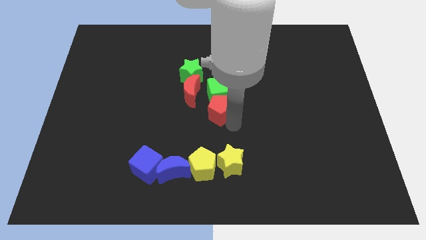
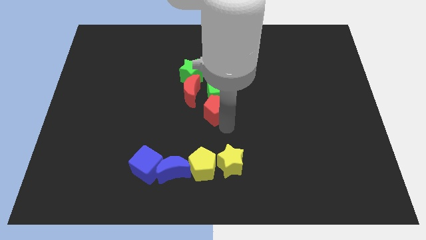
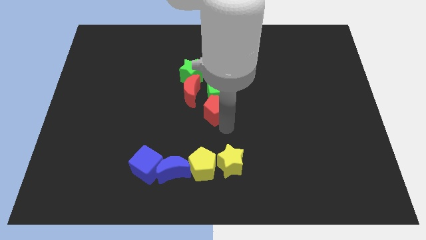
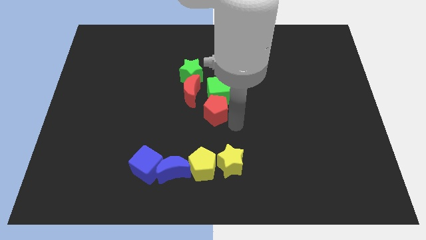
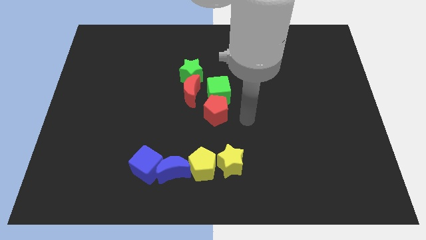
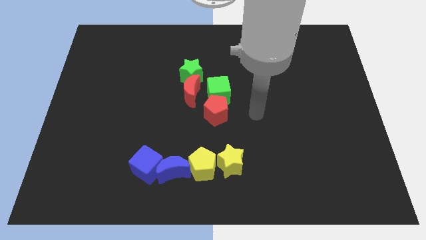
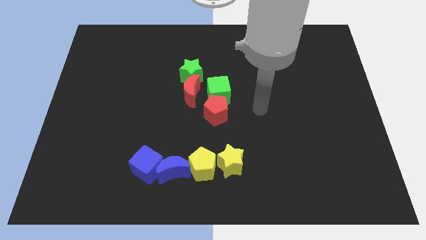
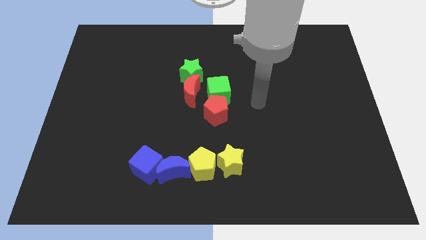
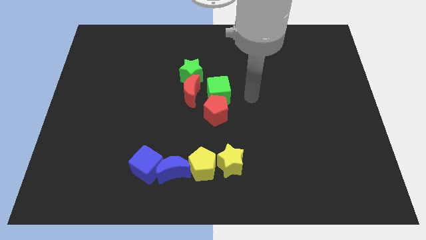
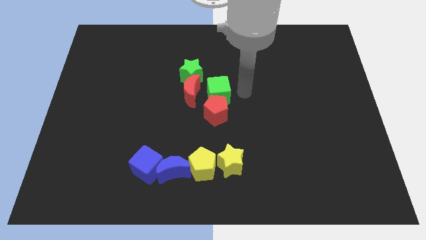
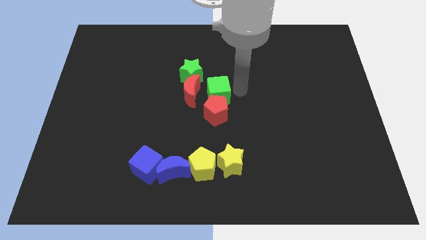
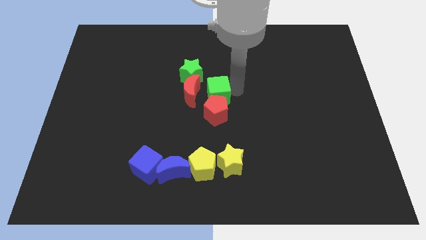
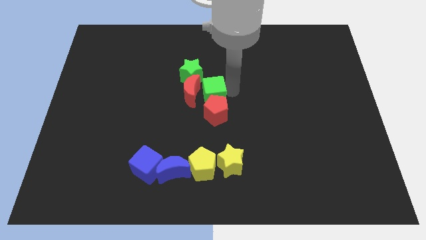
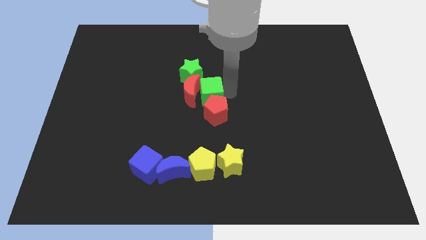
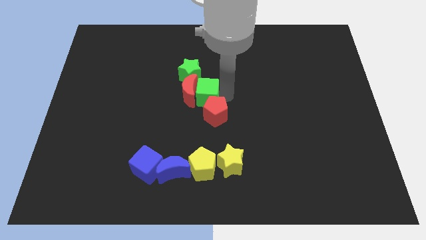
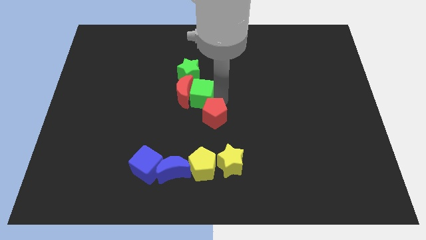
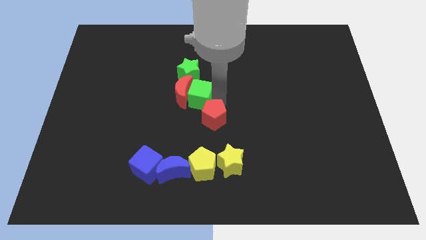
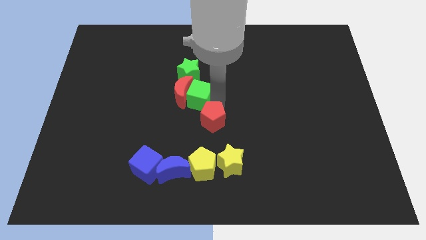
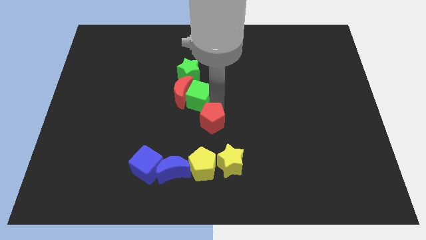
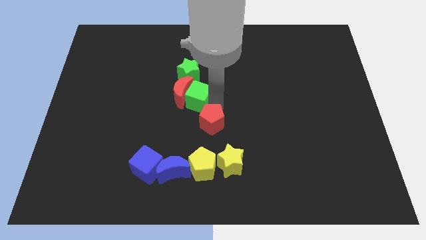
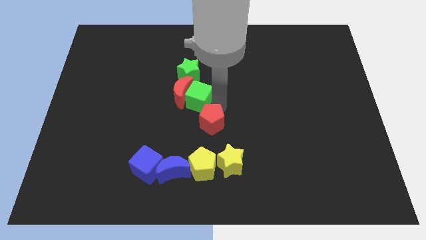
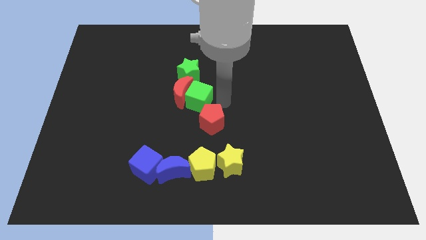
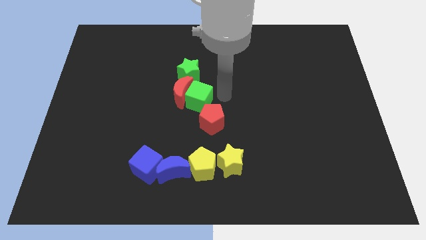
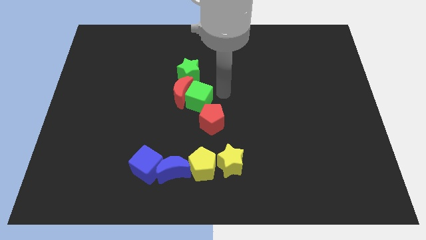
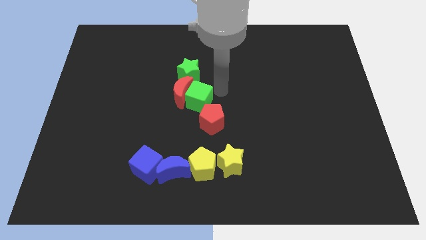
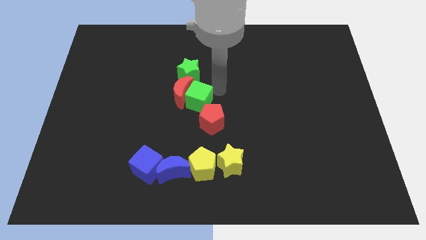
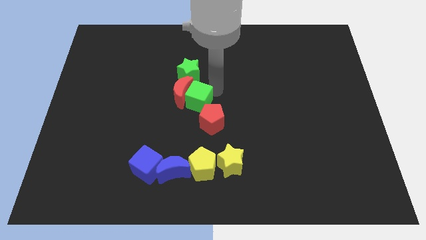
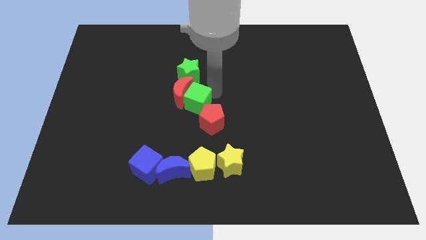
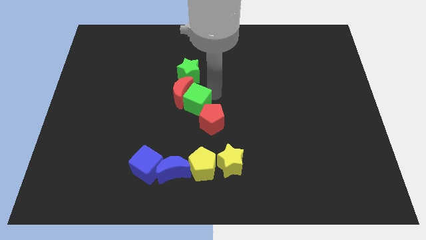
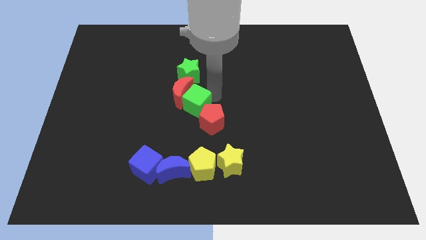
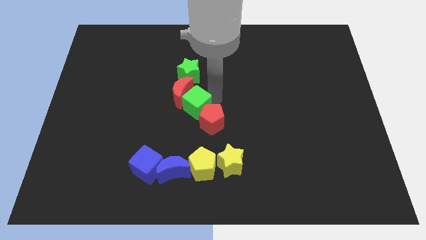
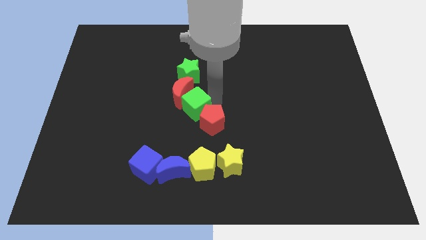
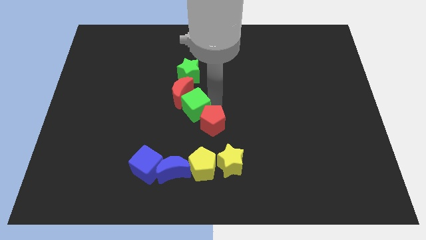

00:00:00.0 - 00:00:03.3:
move the green cube between the pentagon and red moon

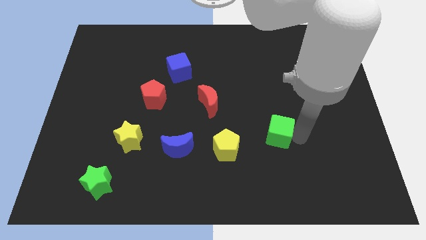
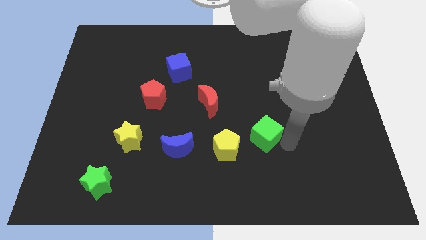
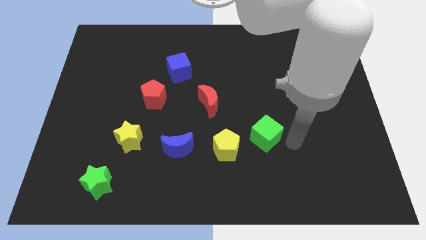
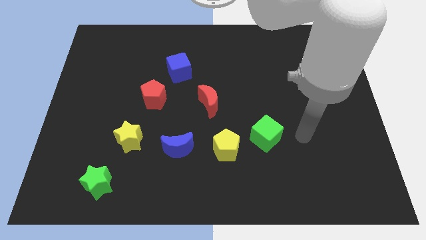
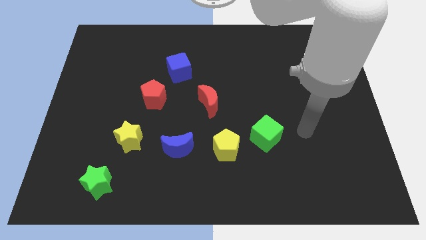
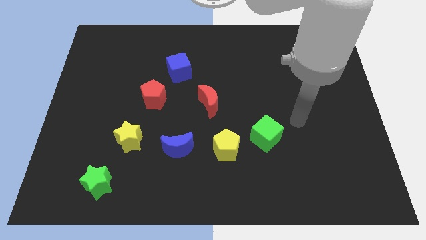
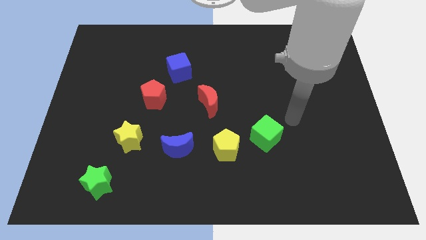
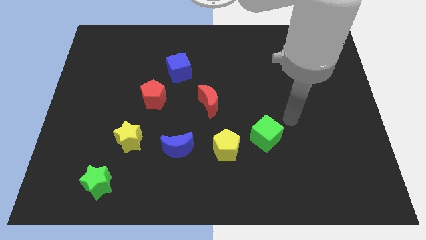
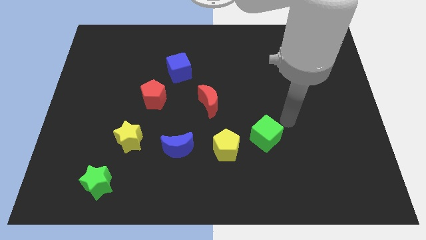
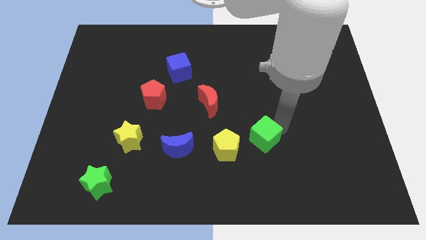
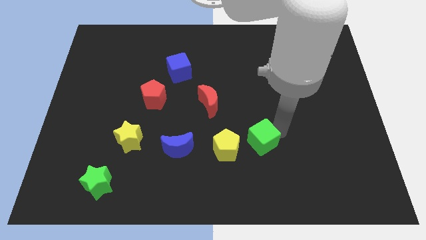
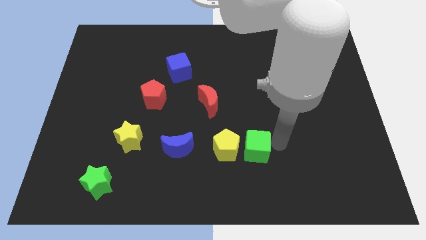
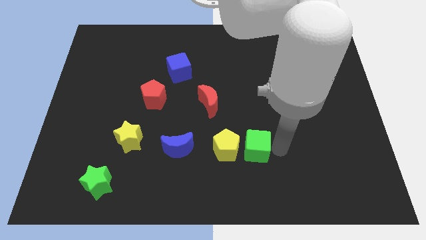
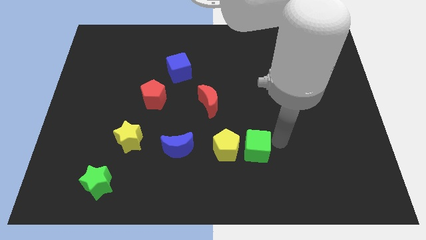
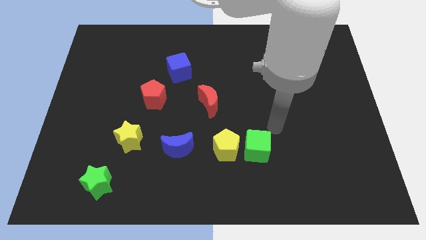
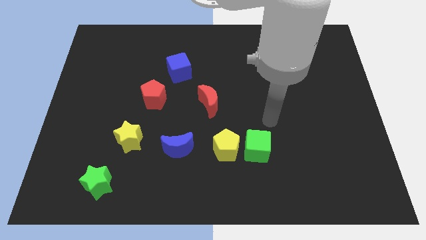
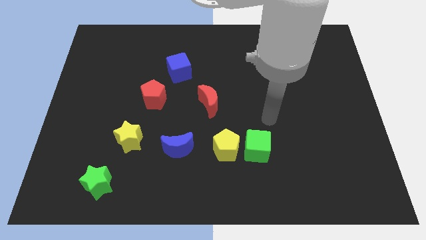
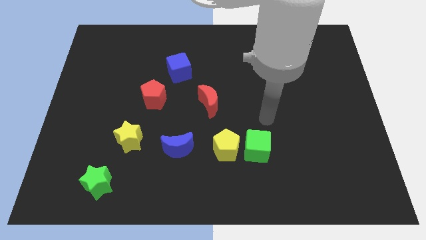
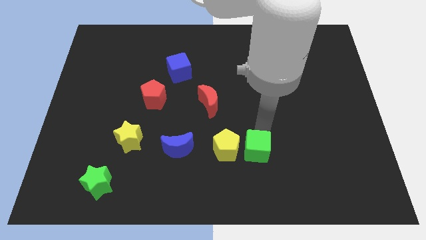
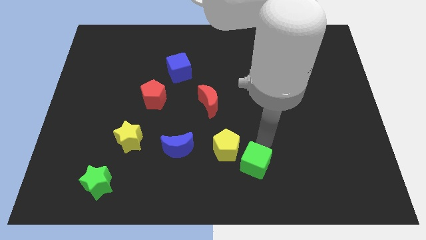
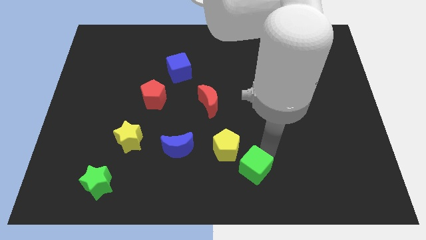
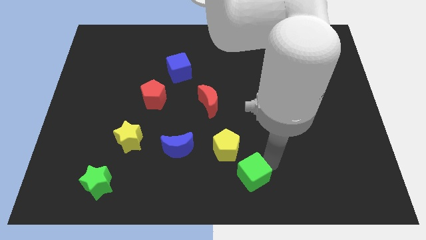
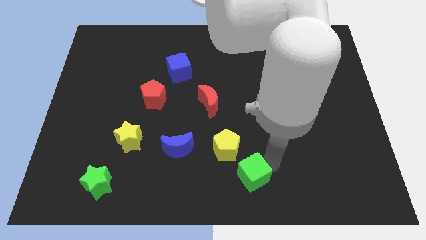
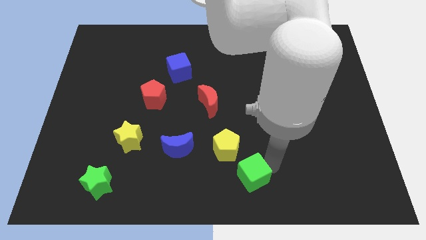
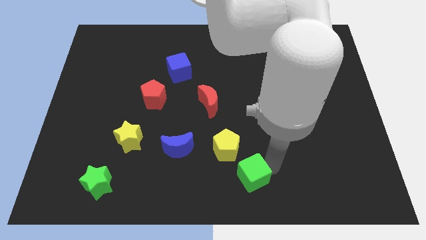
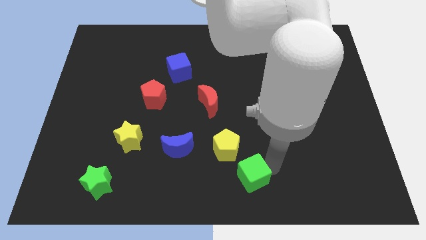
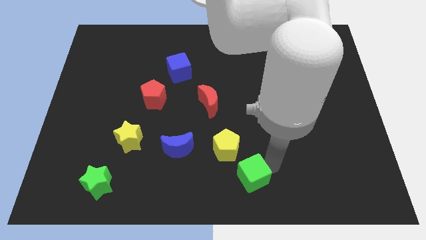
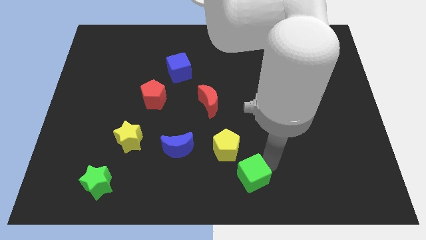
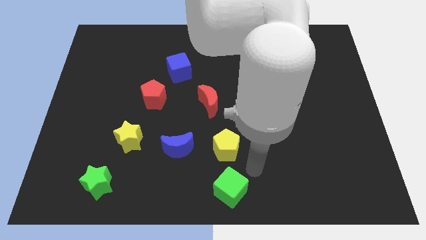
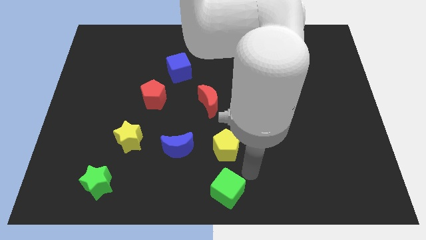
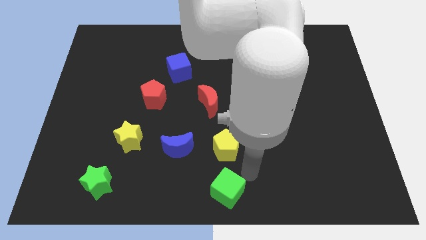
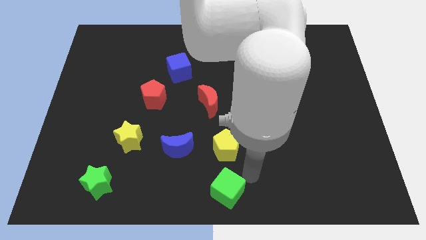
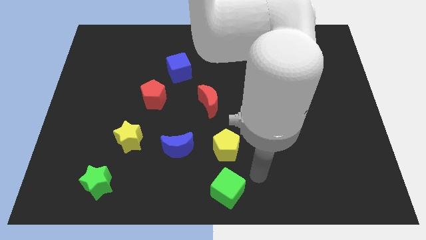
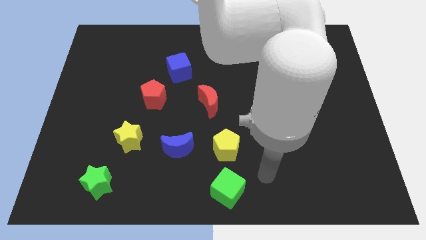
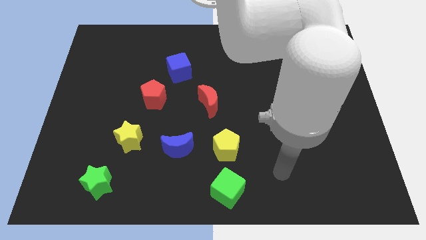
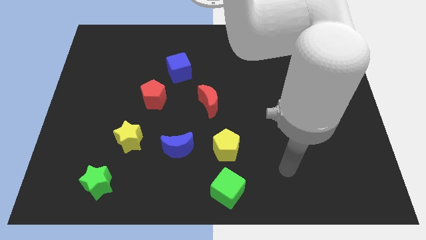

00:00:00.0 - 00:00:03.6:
place the green cube down to the yellow pentagon

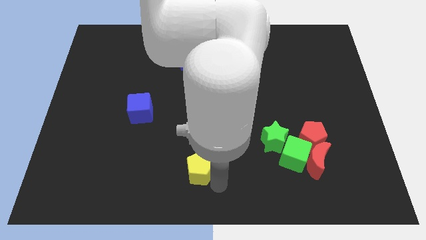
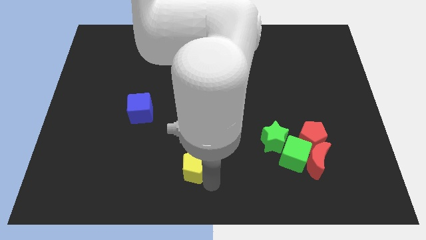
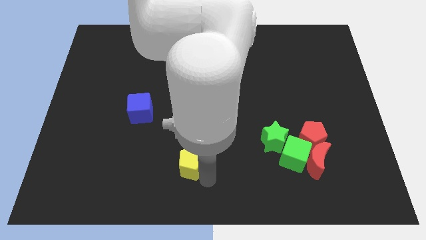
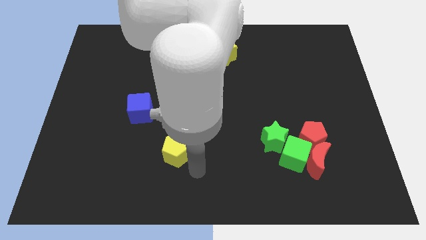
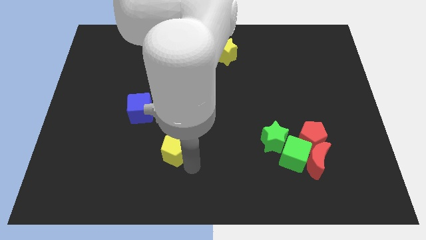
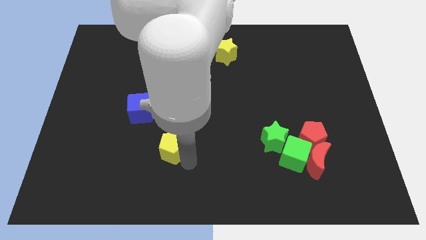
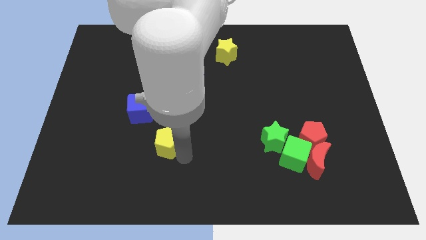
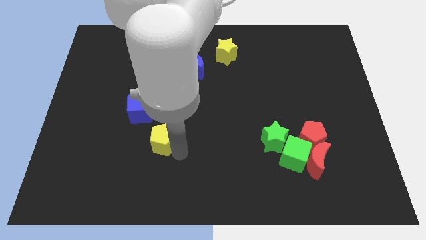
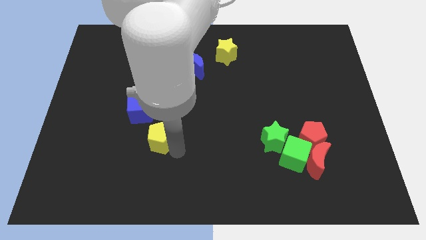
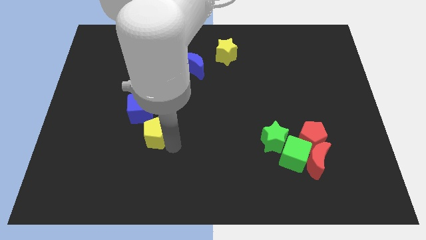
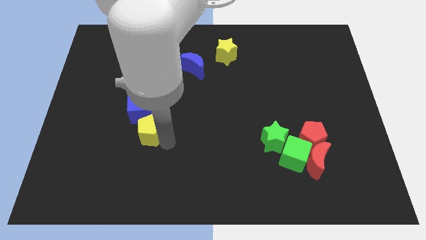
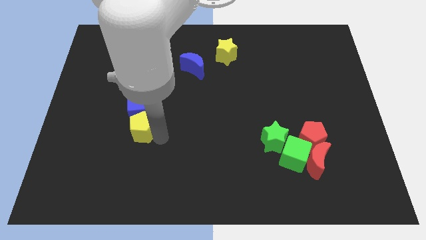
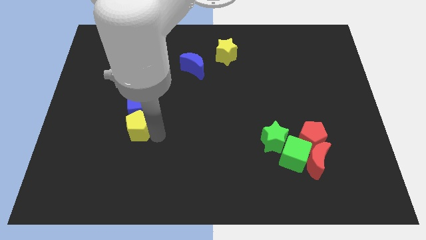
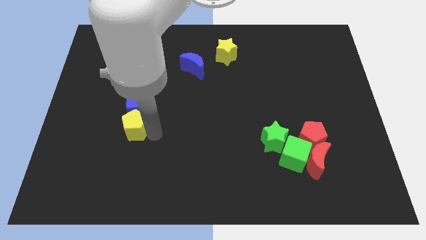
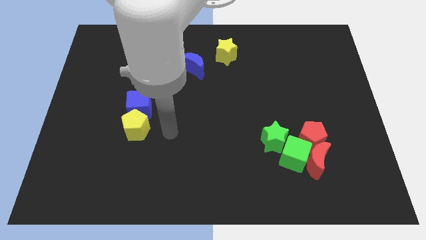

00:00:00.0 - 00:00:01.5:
move the yellow pentagon below the blue cube

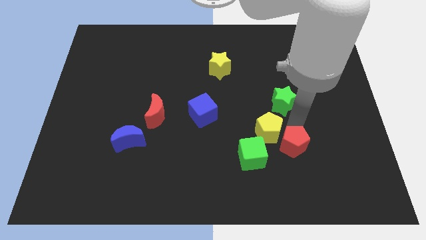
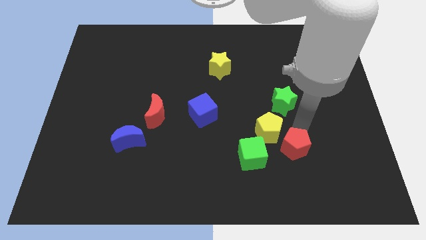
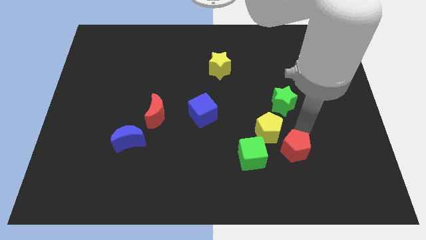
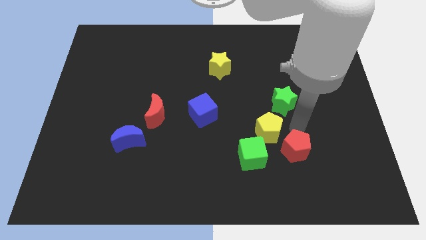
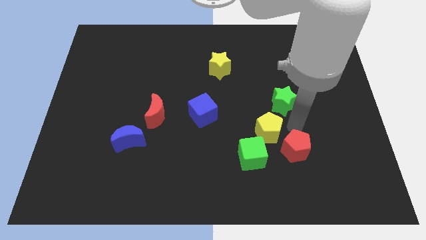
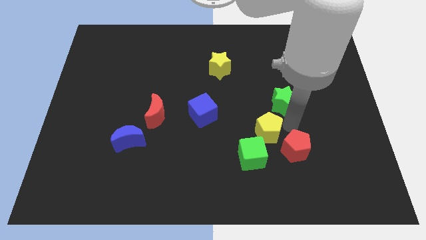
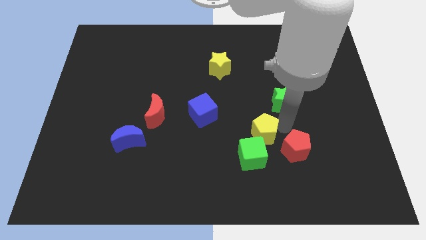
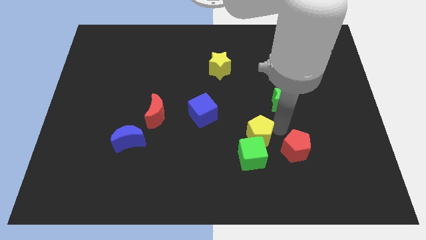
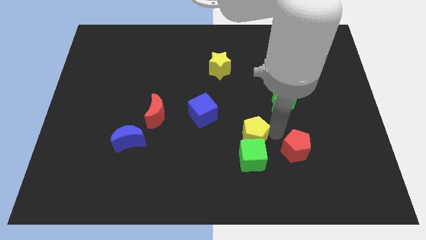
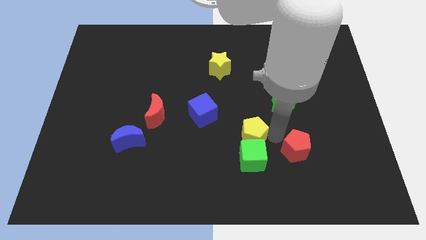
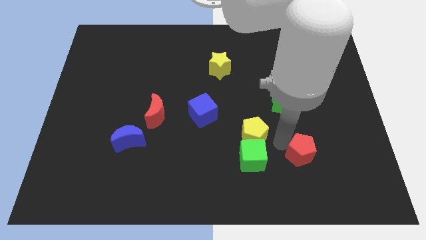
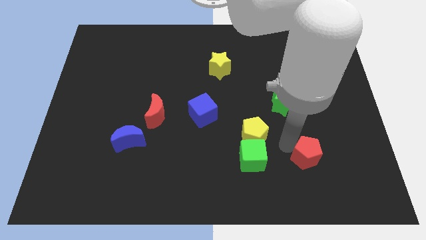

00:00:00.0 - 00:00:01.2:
separate yellow and red pentagons
